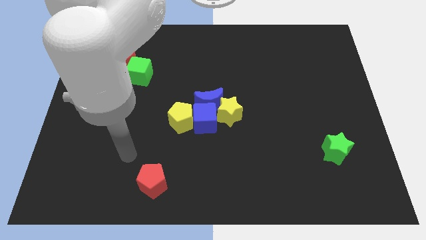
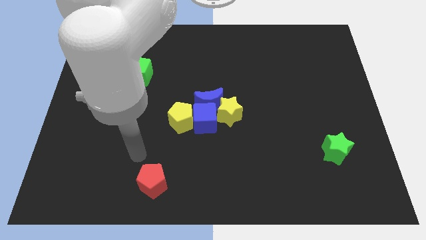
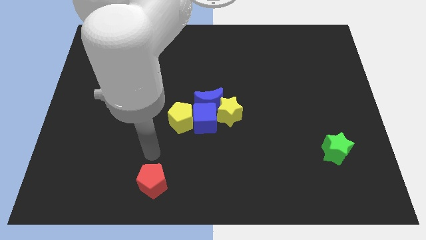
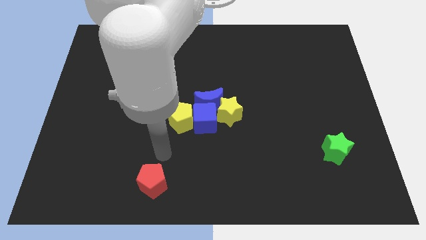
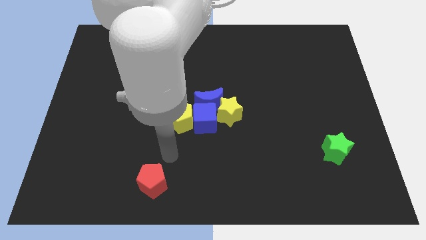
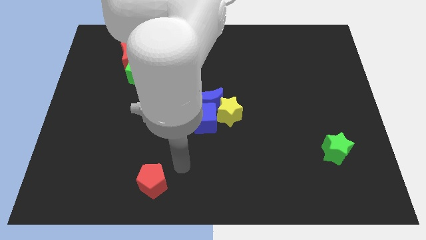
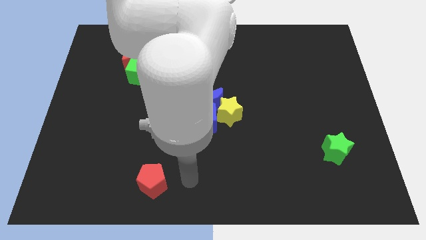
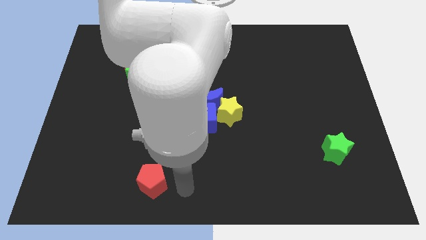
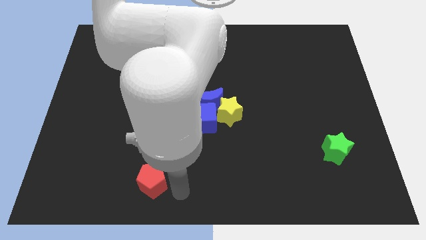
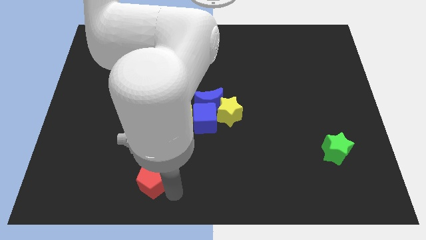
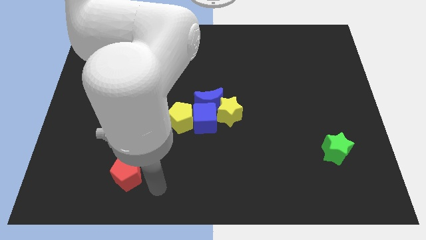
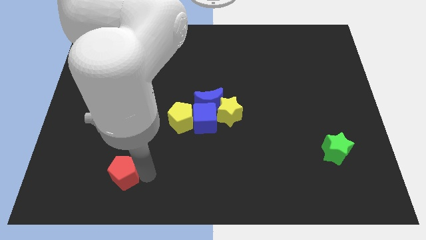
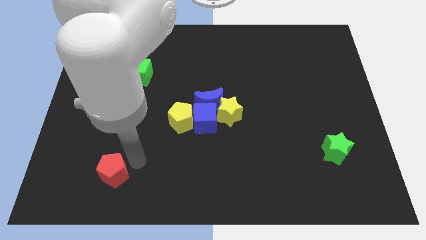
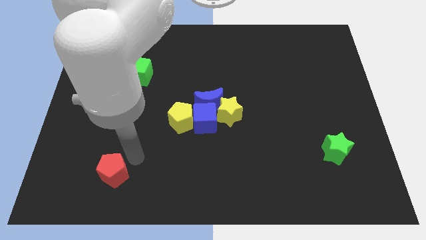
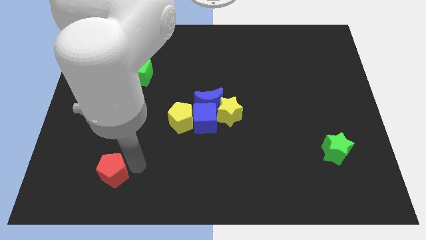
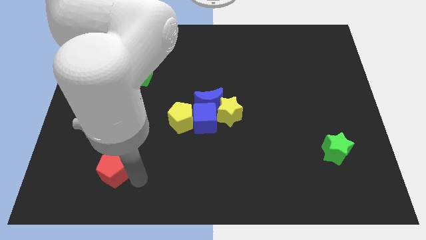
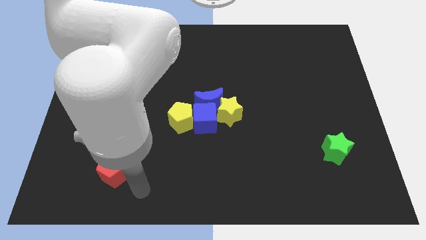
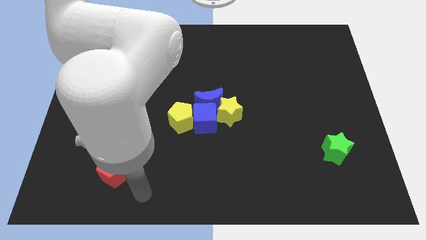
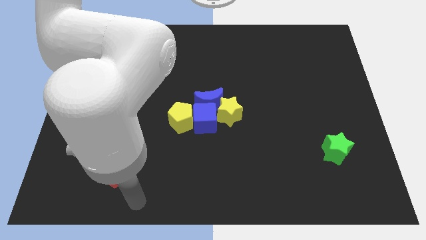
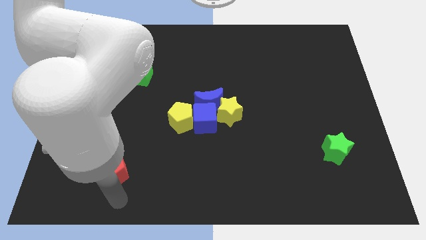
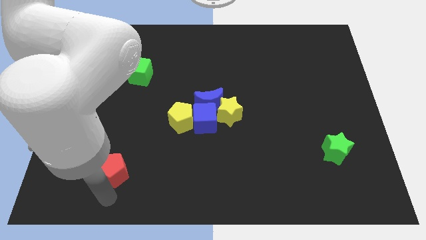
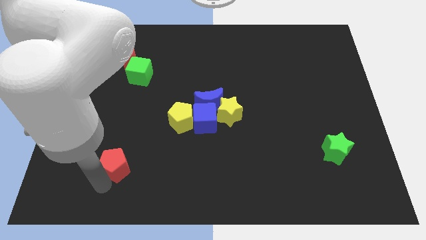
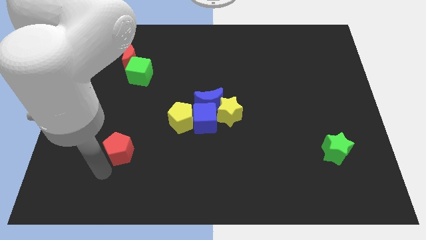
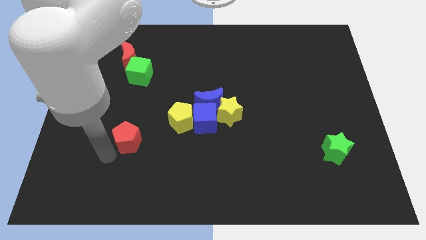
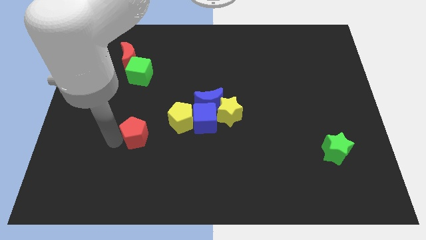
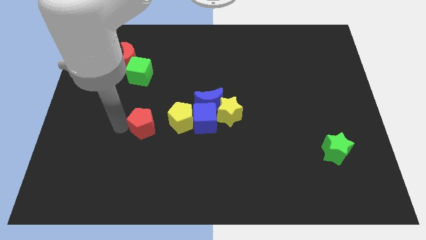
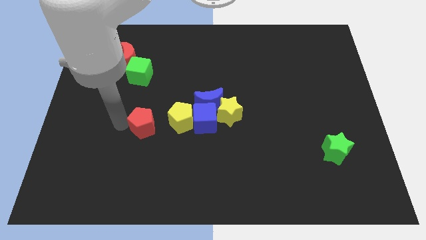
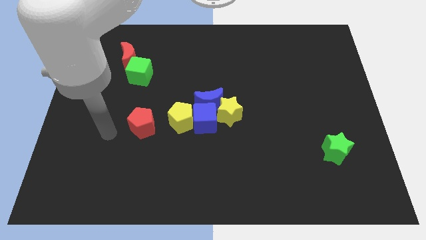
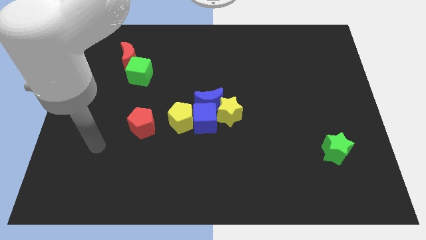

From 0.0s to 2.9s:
place red pentagon beside yellow pentagon

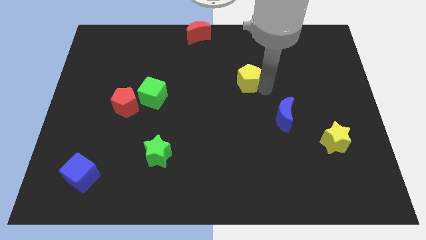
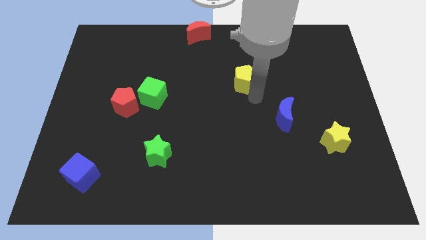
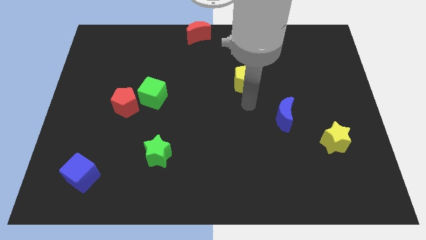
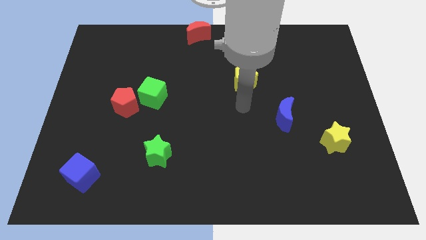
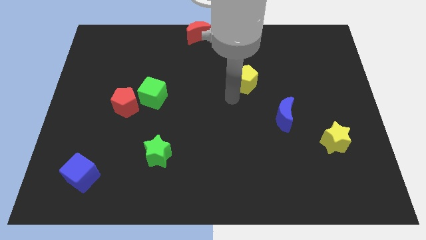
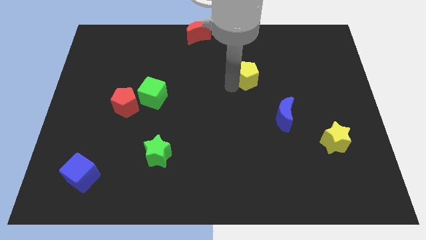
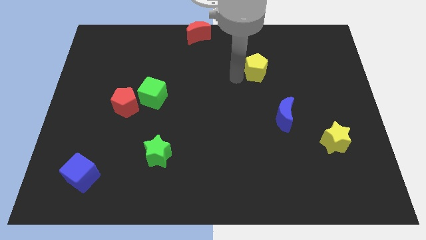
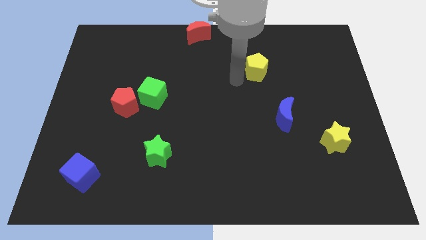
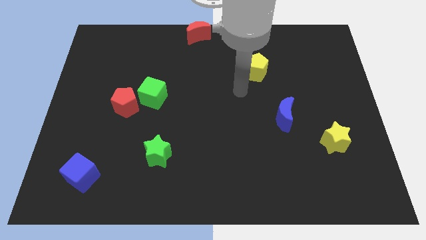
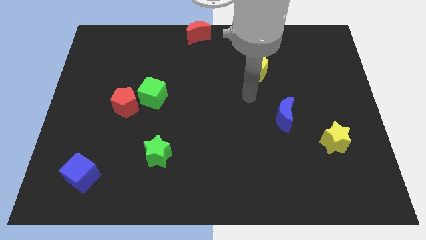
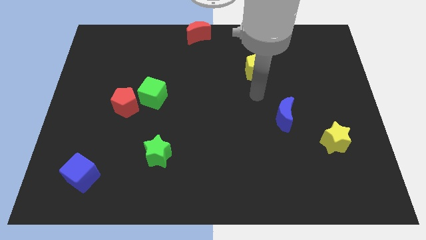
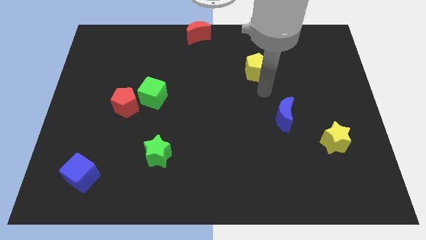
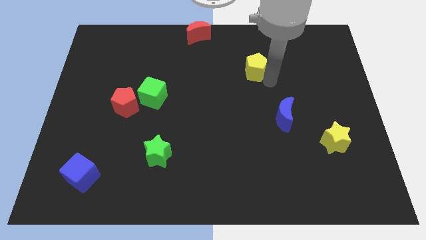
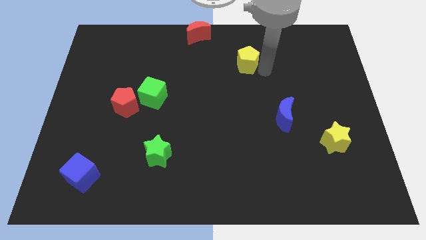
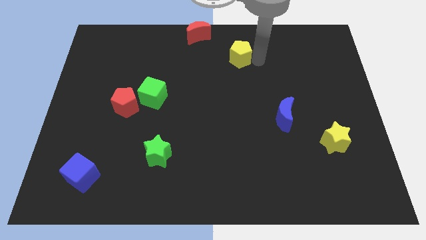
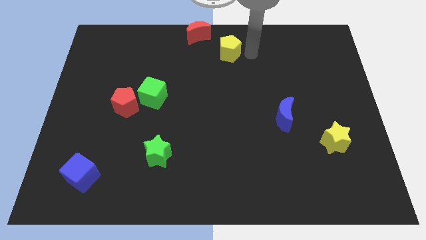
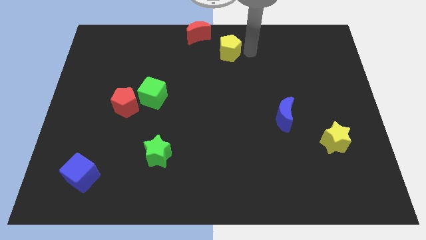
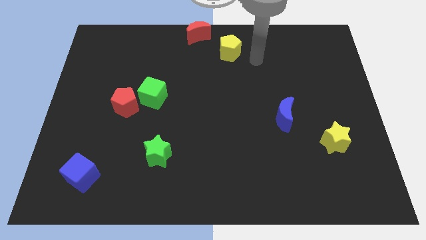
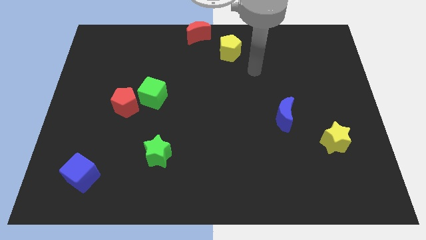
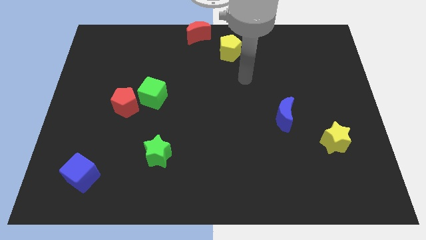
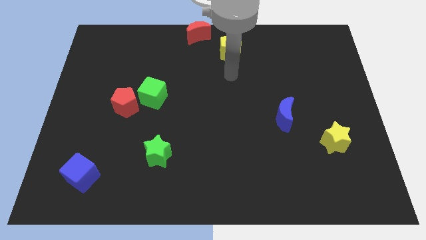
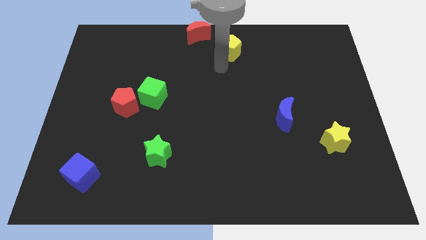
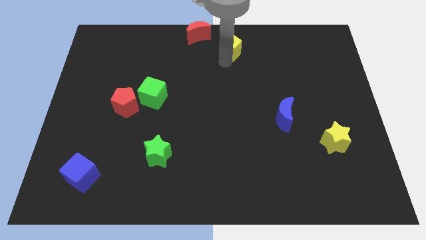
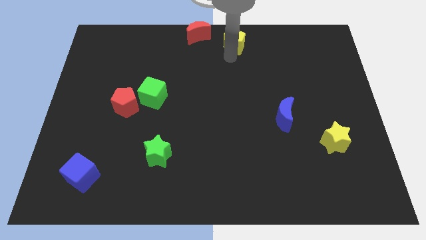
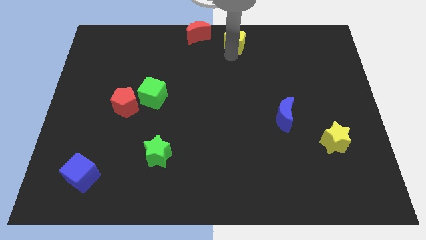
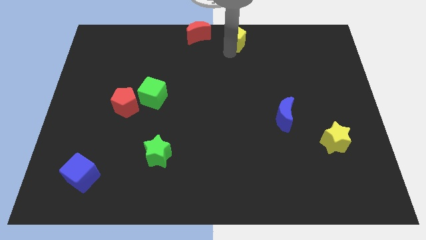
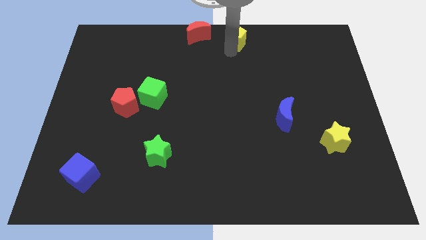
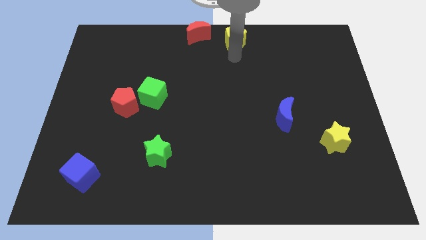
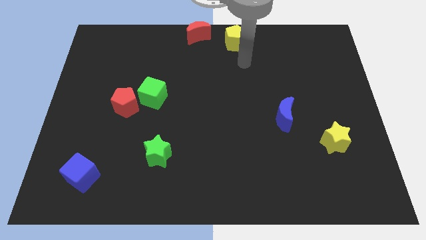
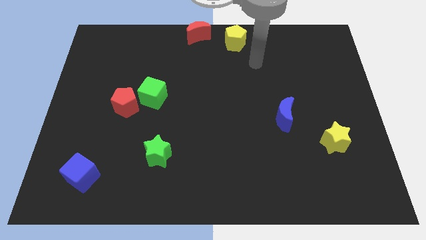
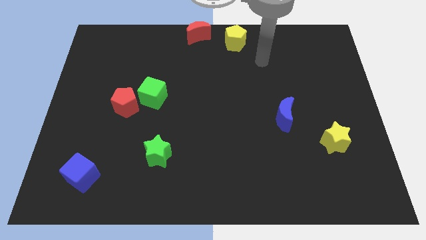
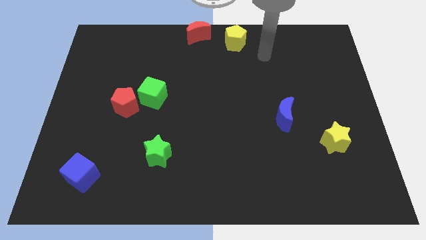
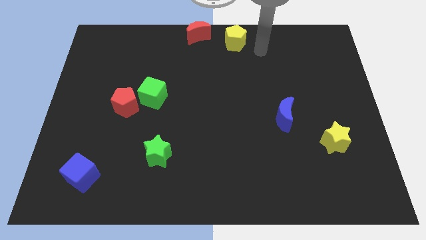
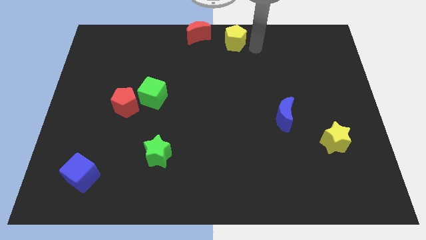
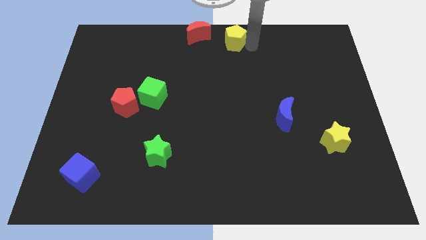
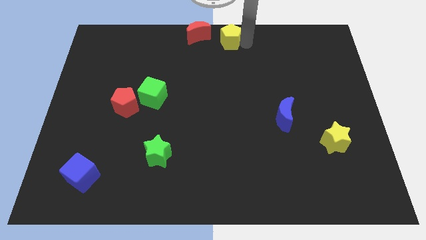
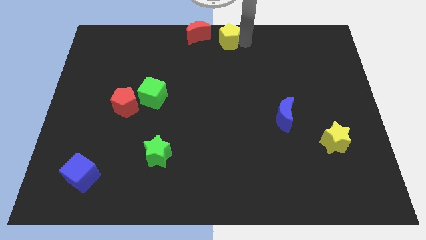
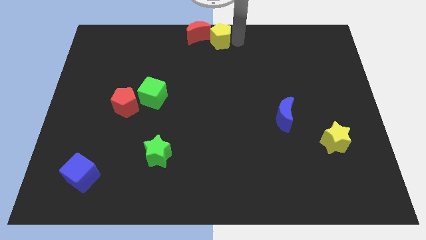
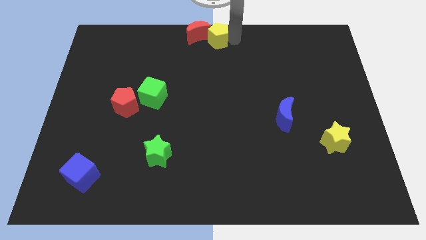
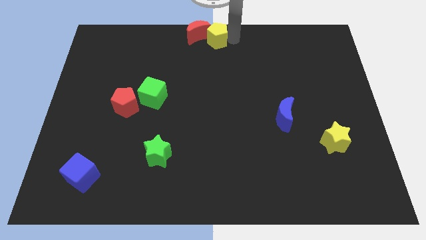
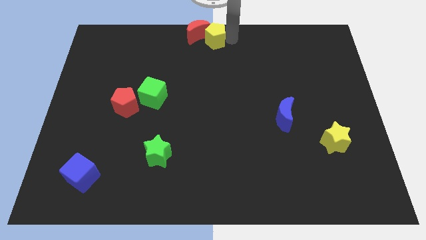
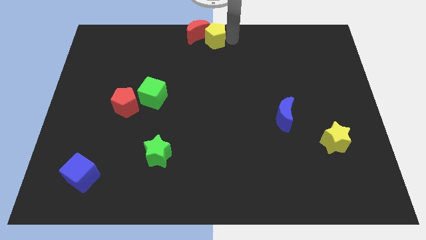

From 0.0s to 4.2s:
place the yellow pentagon right to the red moon

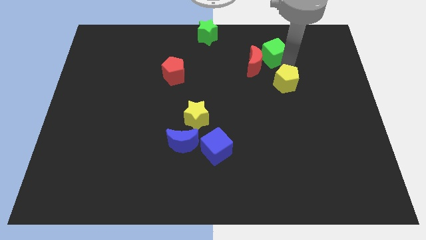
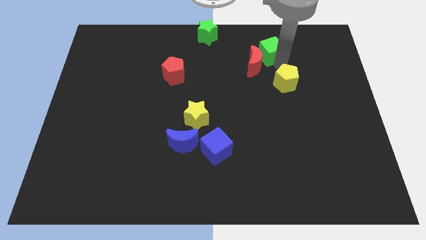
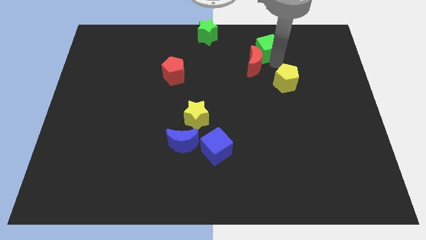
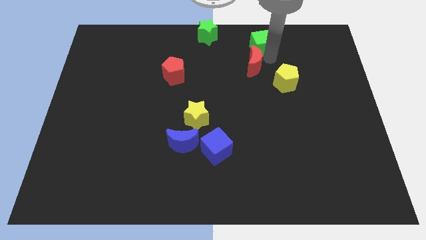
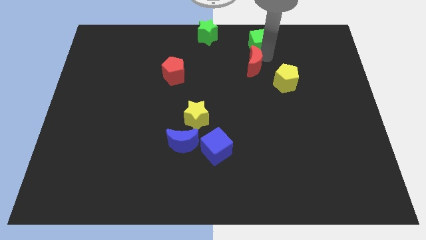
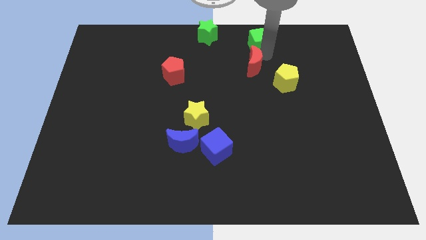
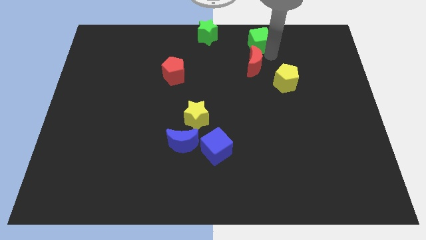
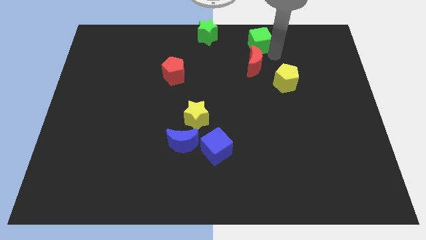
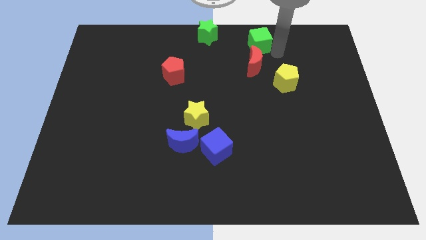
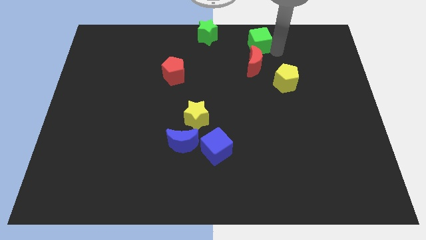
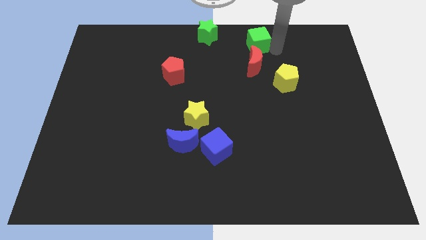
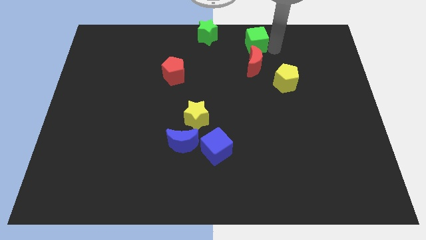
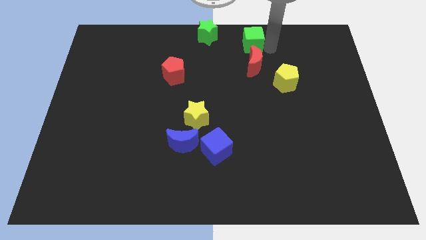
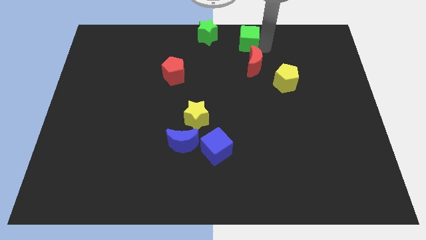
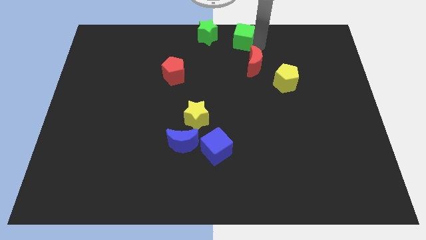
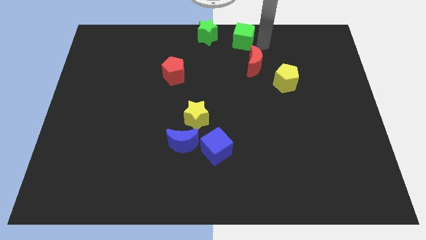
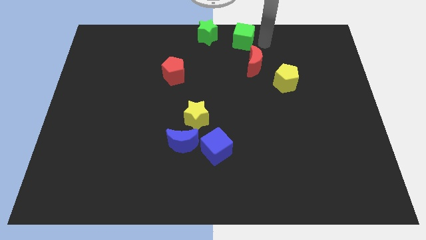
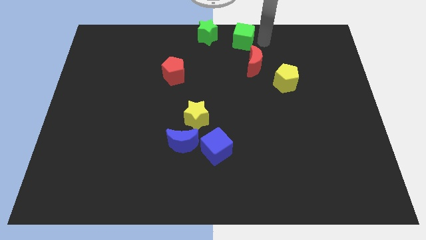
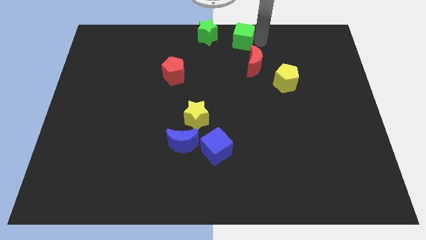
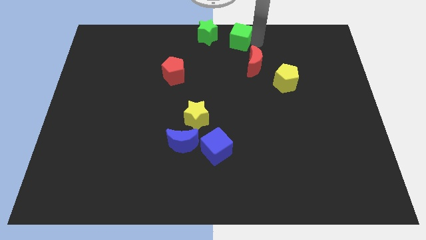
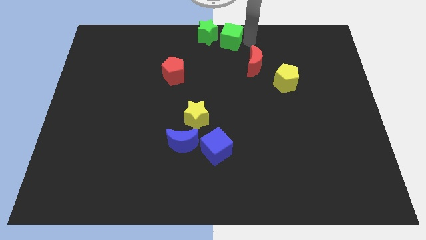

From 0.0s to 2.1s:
move green cube right to green star
